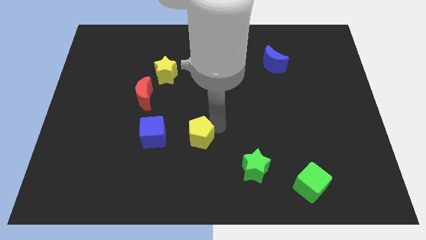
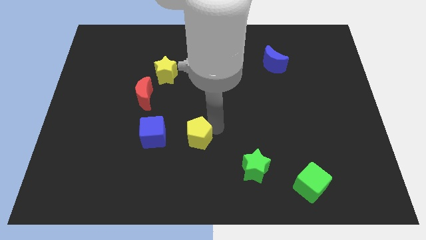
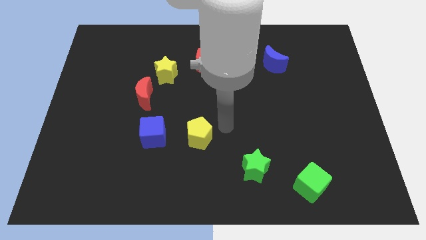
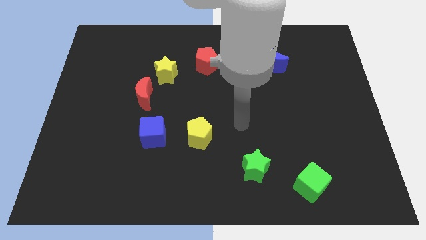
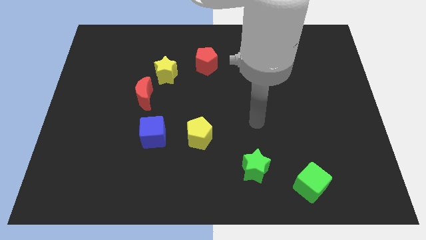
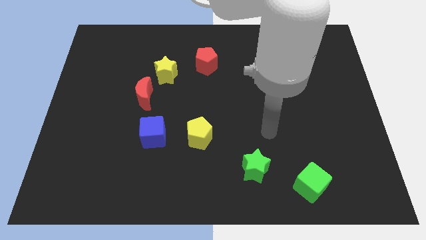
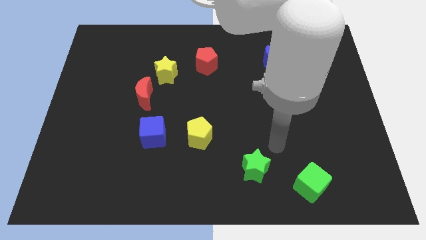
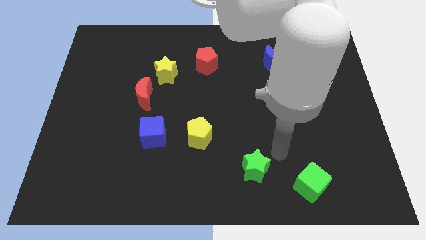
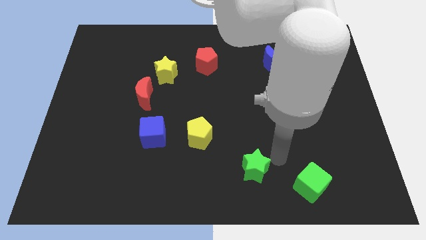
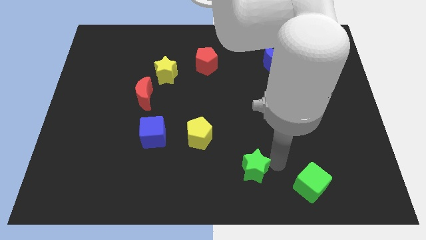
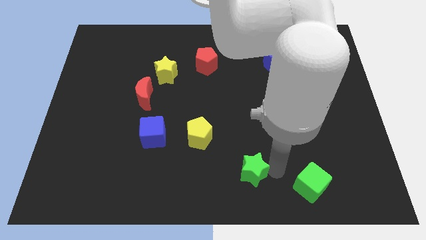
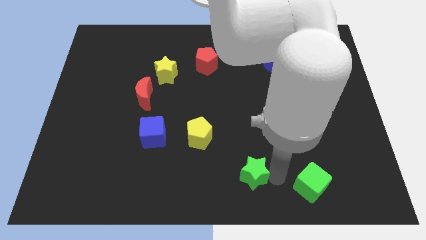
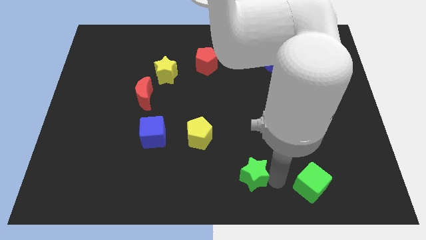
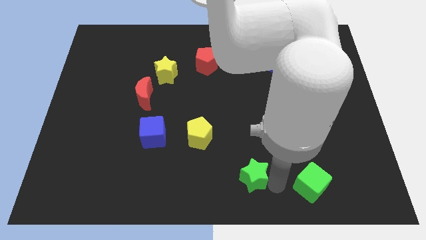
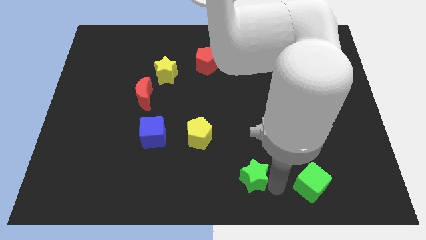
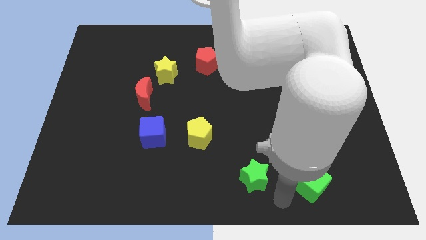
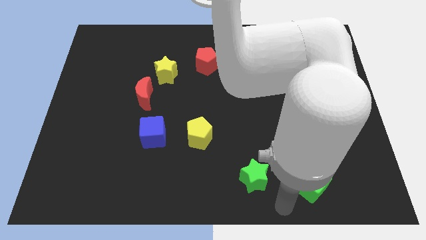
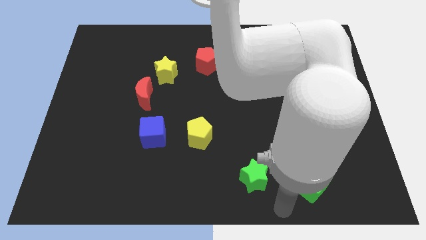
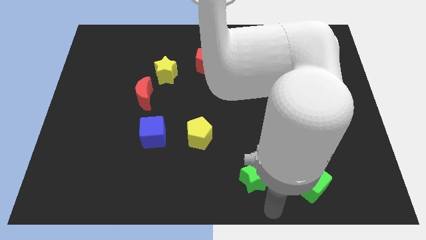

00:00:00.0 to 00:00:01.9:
slightly push the green star

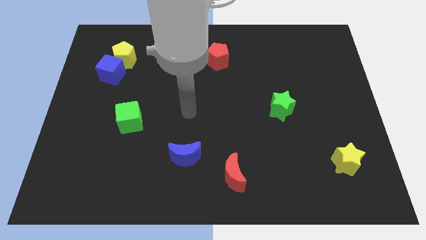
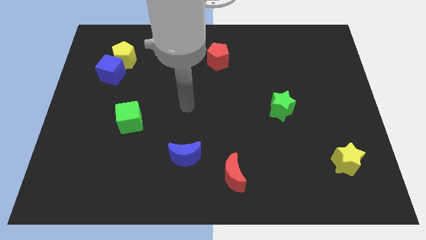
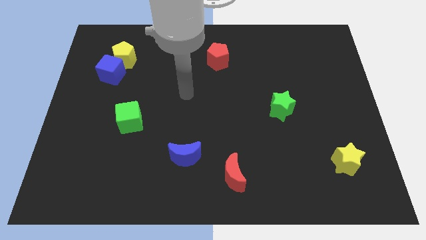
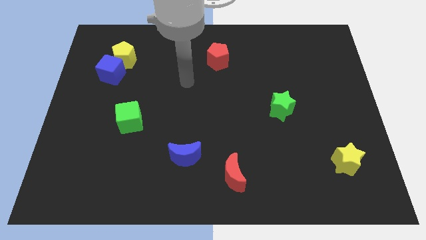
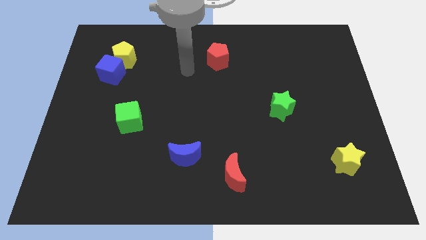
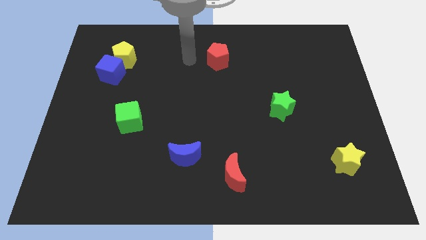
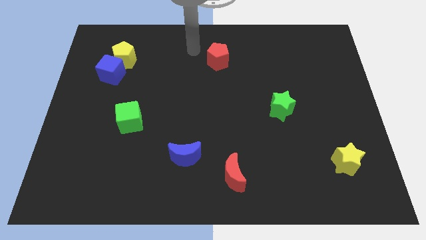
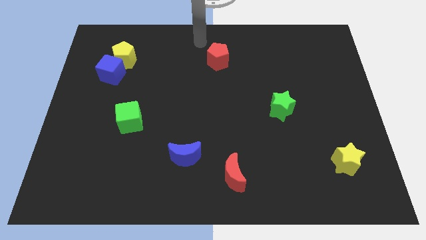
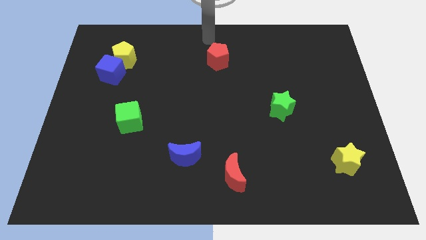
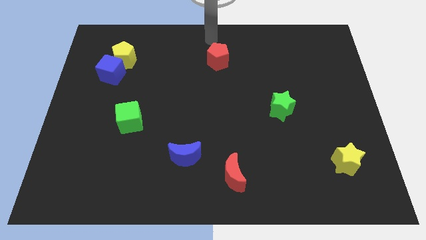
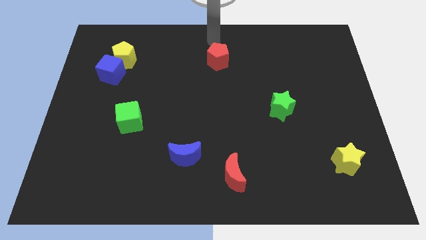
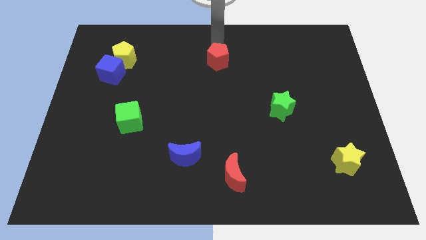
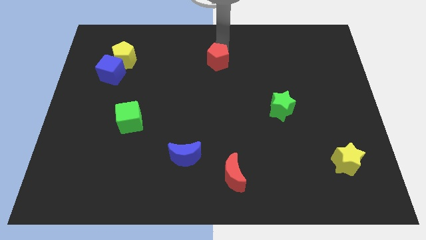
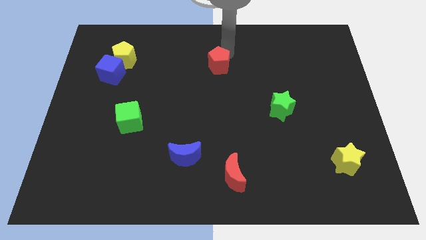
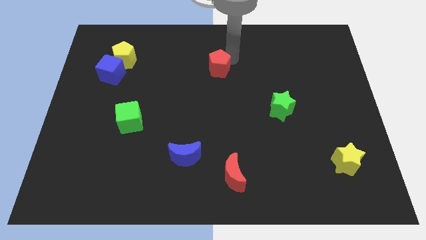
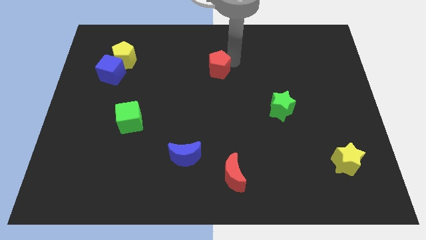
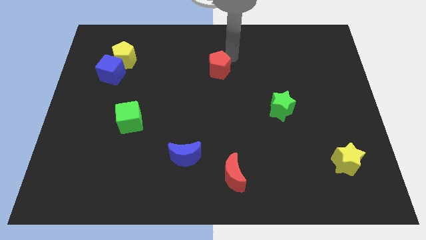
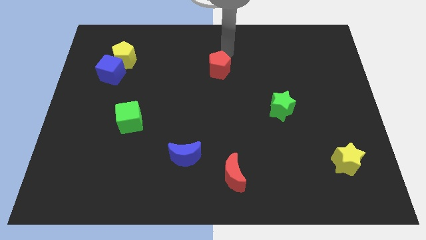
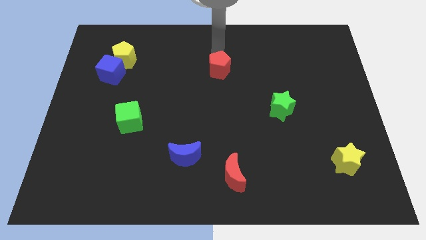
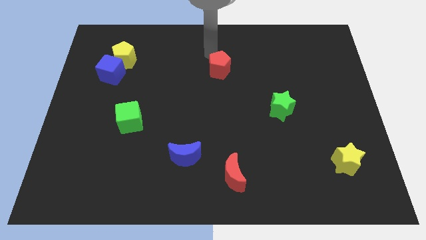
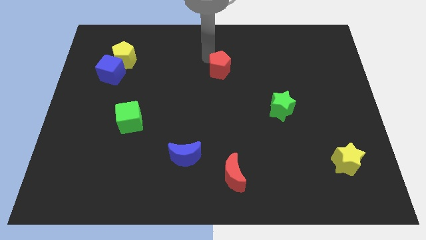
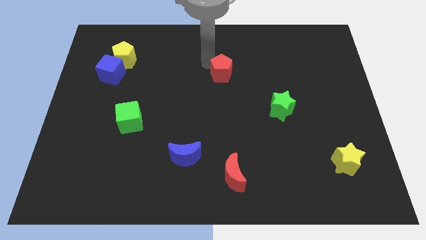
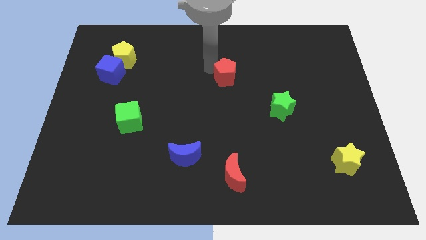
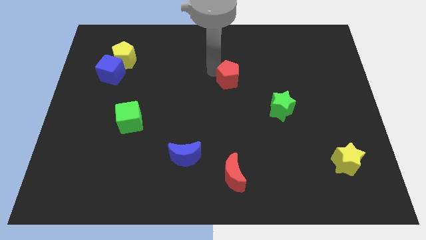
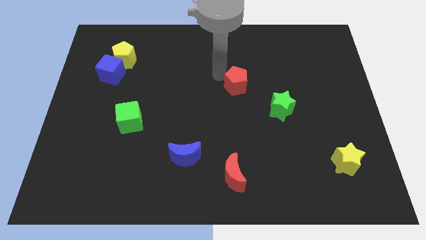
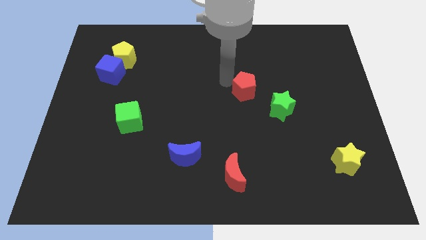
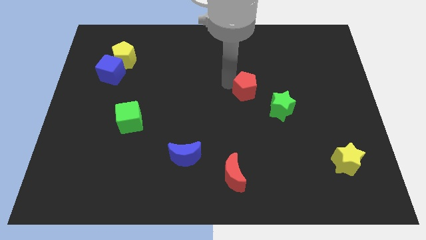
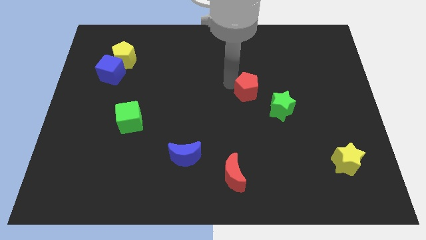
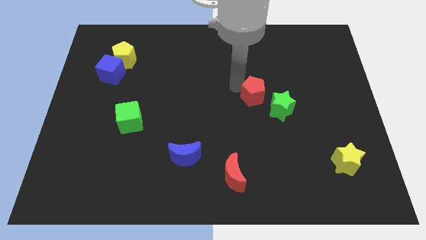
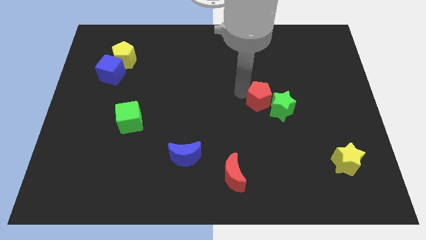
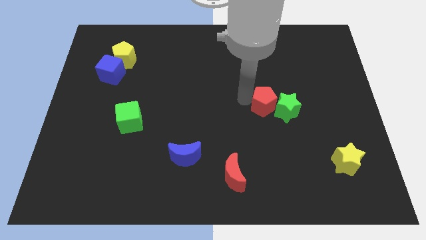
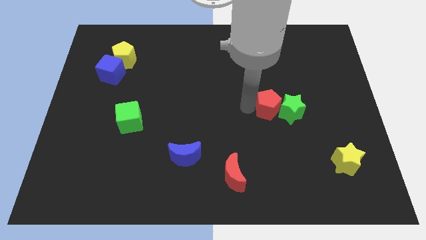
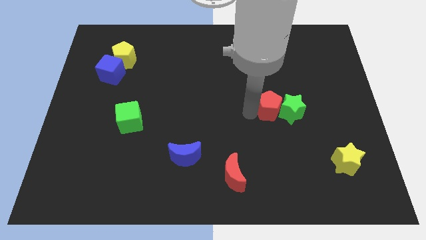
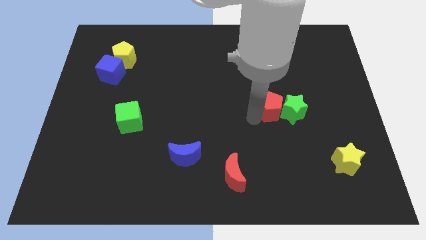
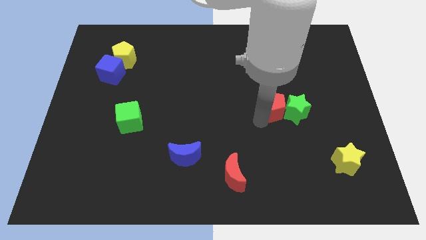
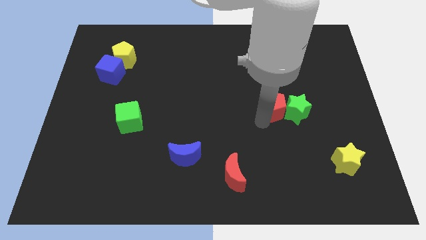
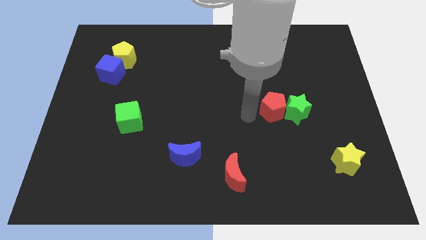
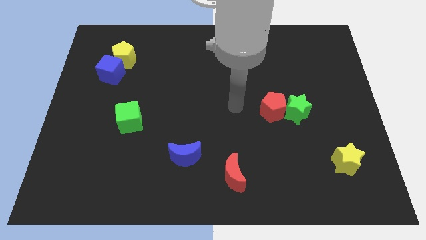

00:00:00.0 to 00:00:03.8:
move the red pentagon into the green star

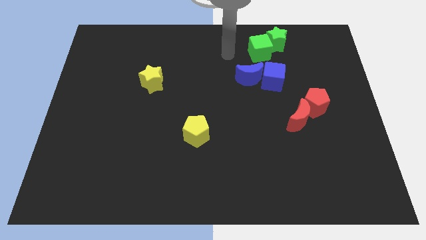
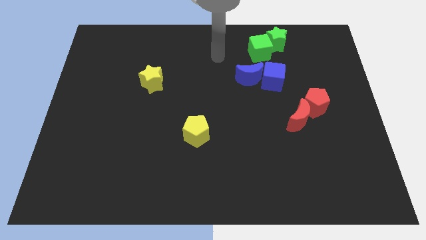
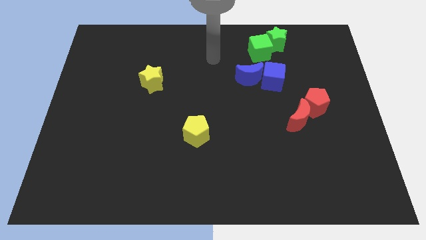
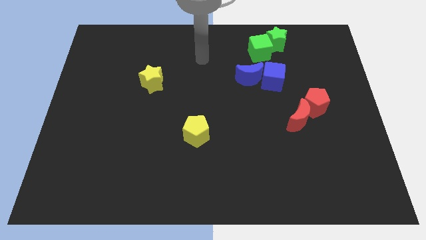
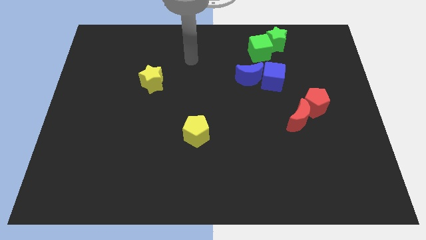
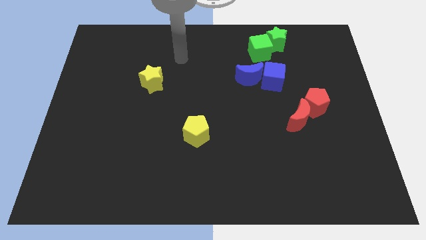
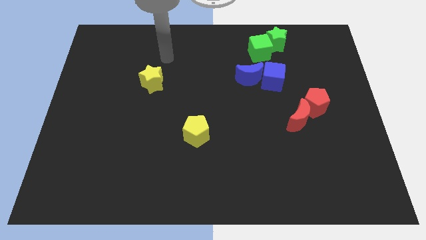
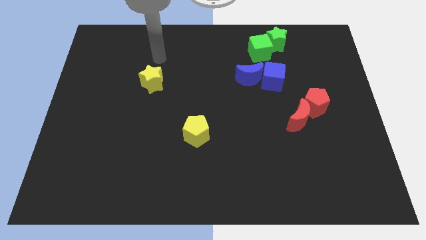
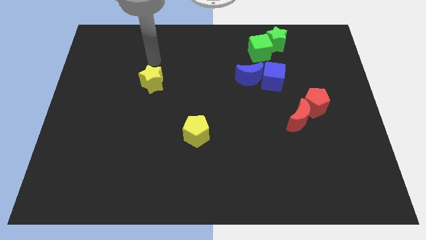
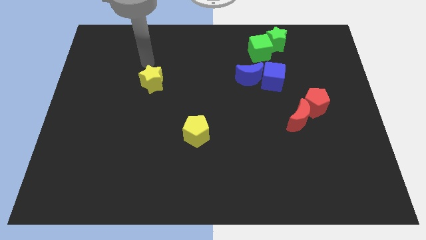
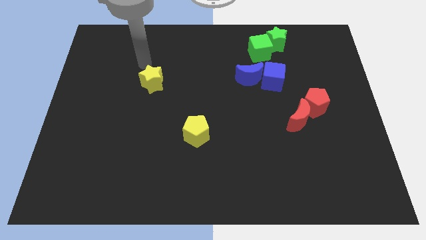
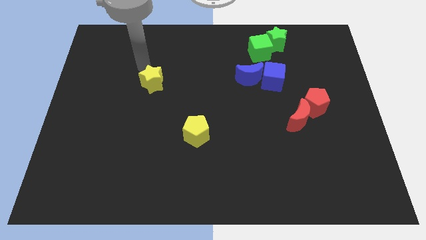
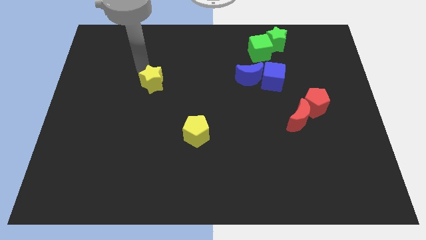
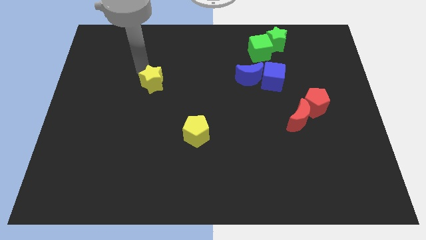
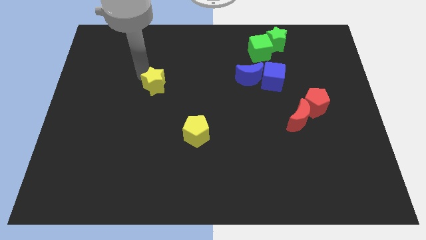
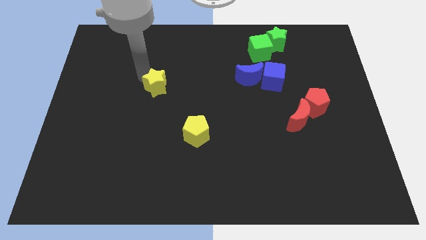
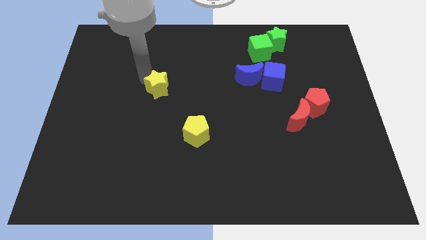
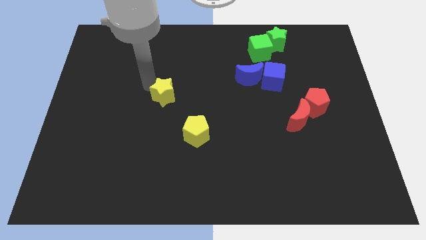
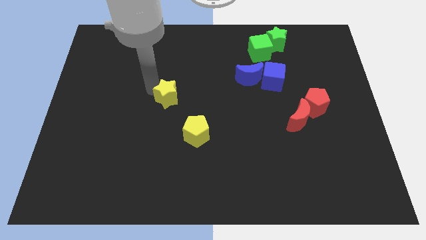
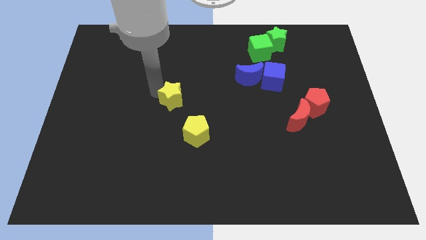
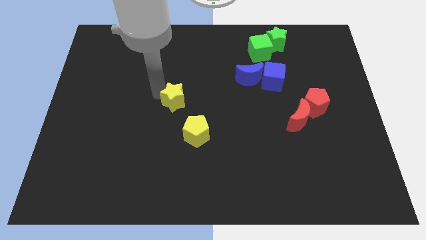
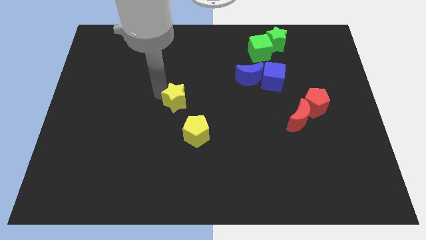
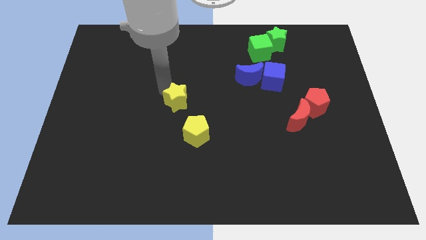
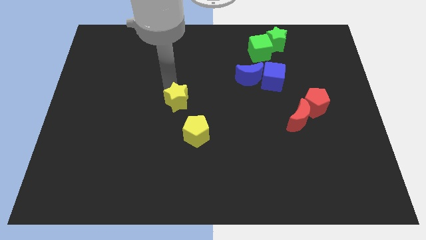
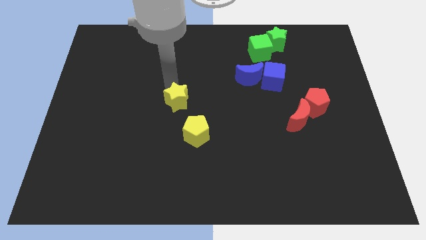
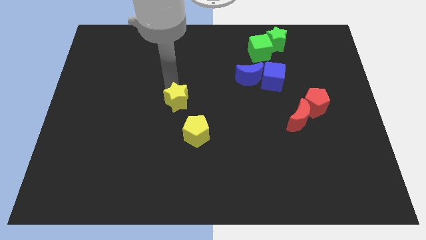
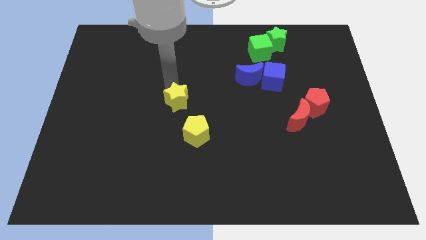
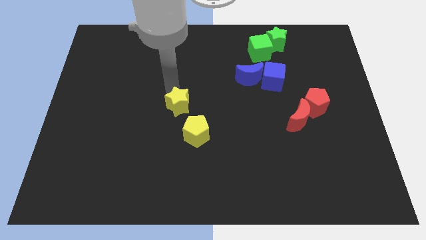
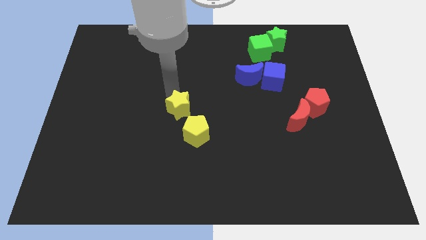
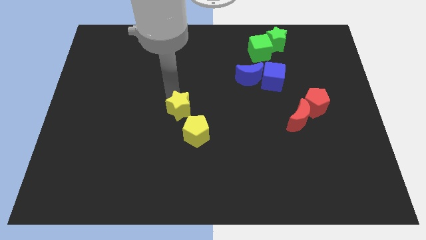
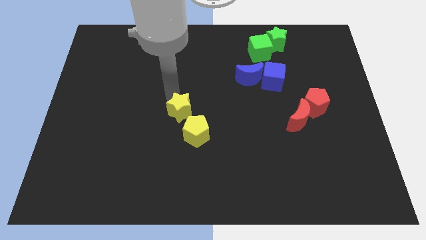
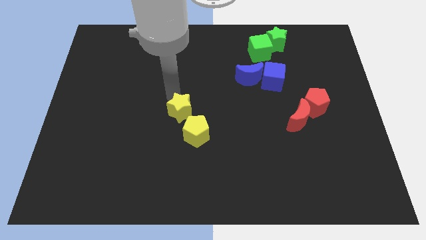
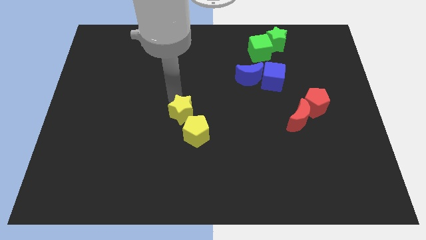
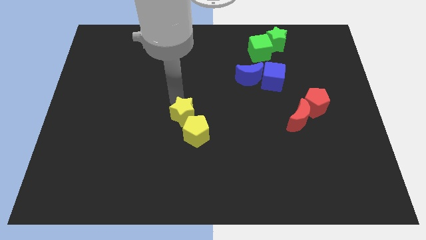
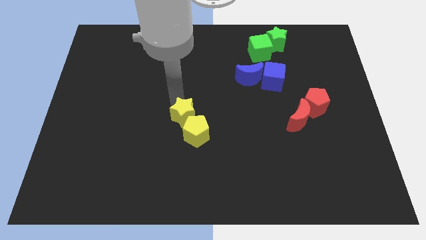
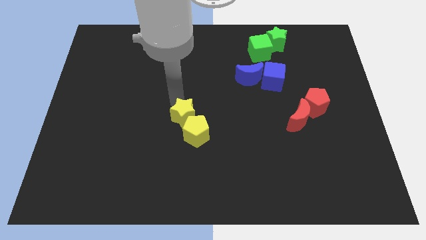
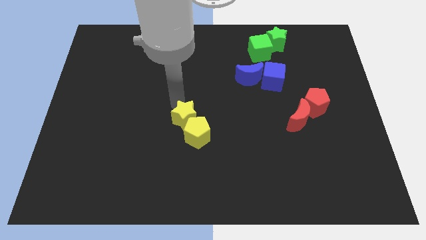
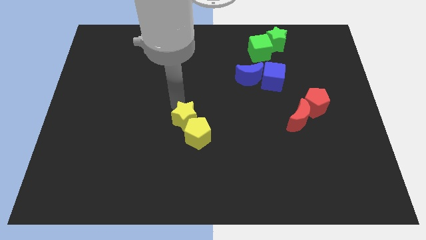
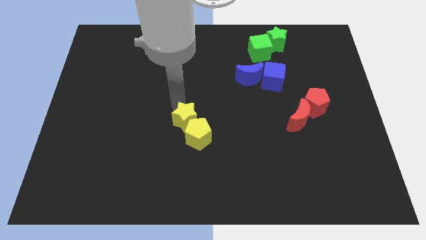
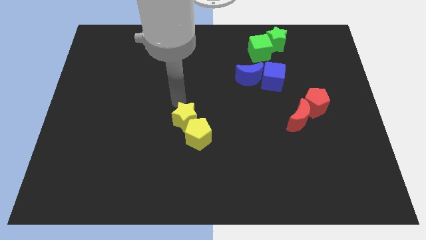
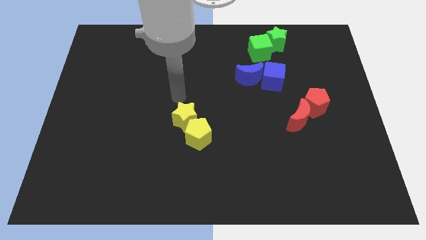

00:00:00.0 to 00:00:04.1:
place the yellow star close to the yellow pentagon
